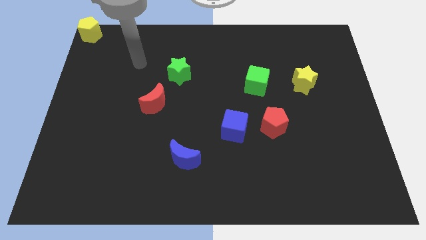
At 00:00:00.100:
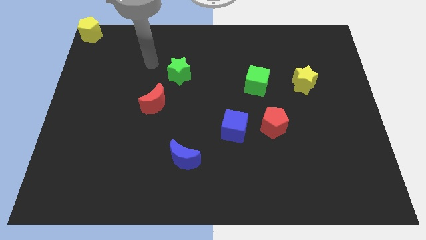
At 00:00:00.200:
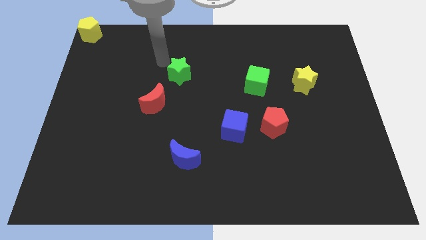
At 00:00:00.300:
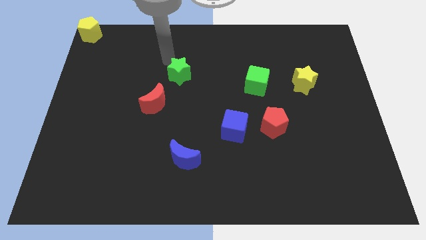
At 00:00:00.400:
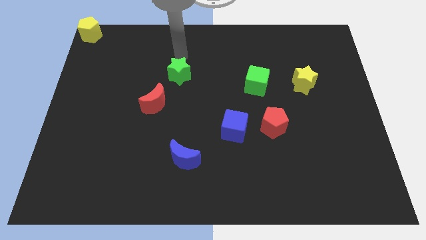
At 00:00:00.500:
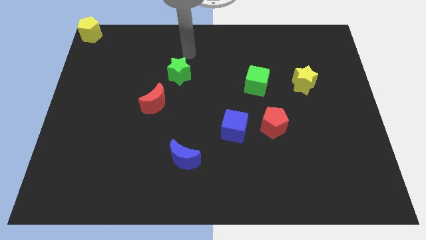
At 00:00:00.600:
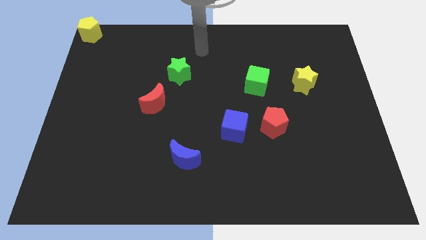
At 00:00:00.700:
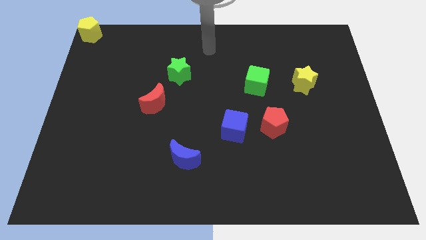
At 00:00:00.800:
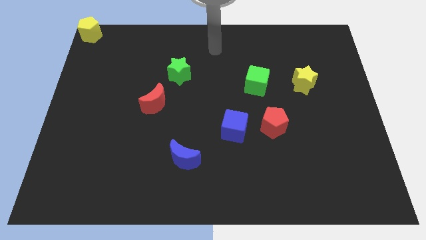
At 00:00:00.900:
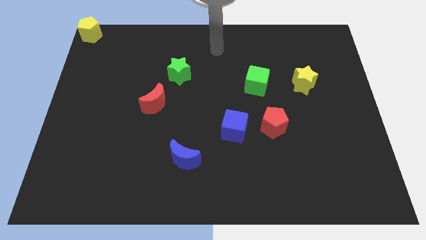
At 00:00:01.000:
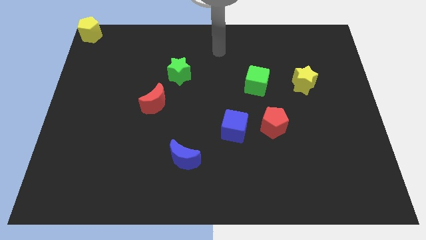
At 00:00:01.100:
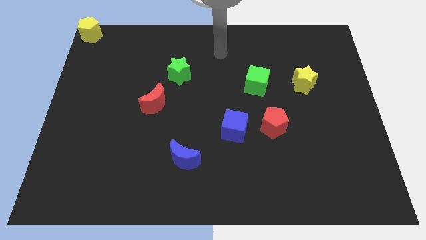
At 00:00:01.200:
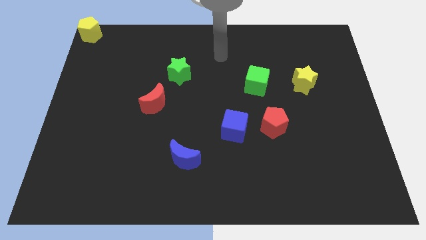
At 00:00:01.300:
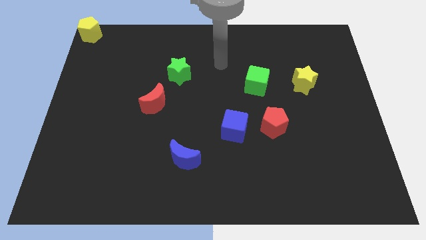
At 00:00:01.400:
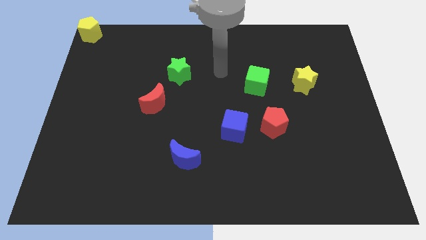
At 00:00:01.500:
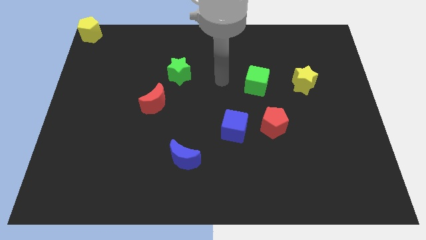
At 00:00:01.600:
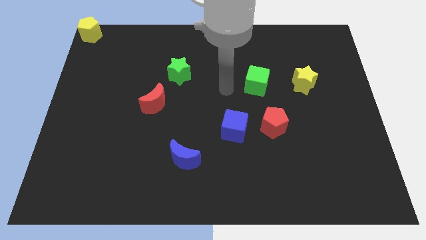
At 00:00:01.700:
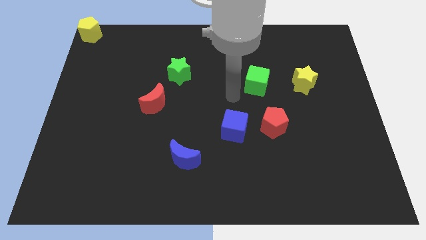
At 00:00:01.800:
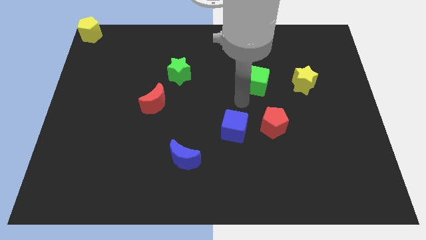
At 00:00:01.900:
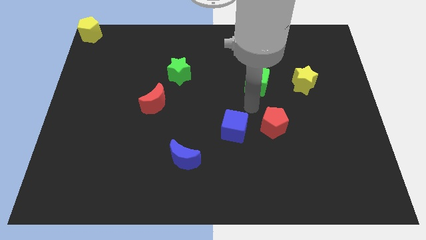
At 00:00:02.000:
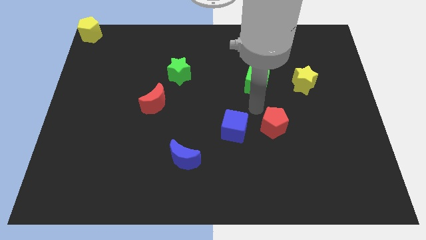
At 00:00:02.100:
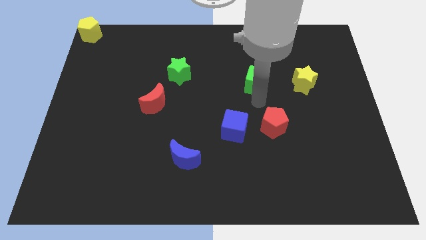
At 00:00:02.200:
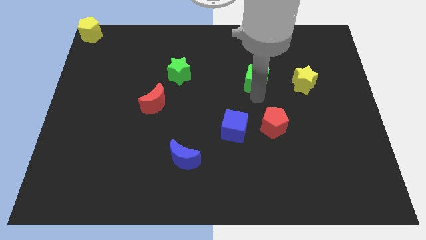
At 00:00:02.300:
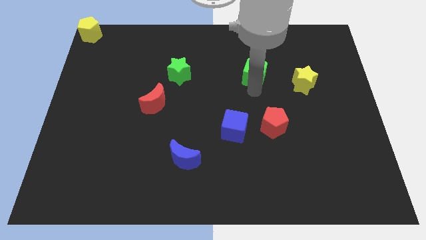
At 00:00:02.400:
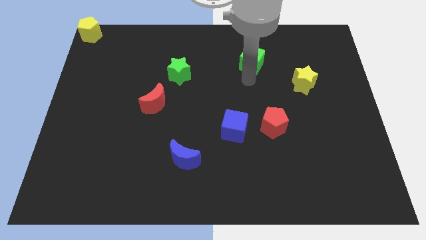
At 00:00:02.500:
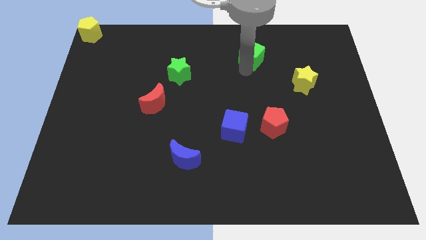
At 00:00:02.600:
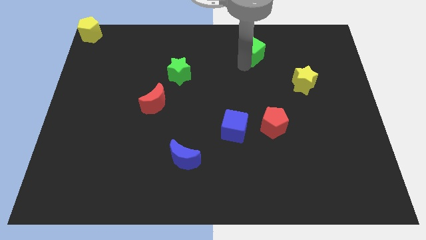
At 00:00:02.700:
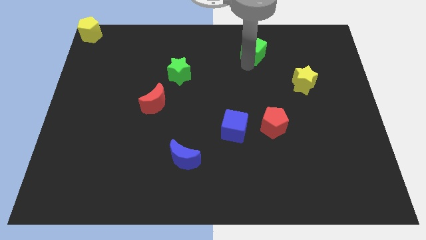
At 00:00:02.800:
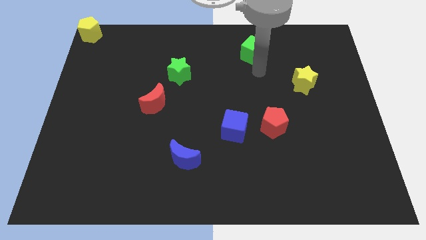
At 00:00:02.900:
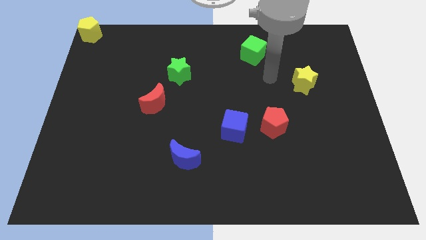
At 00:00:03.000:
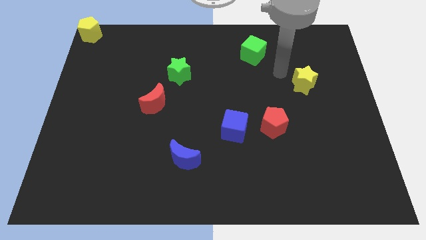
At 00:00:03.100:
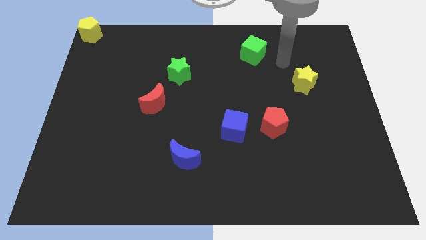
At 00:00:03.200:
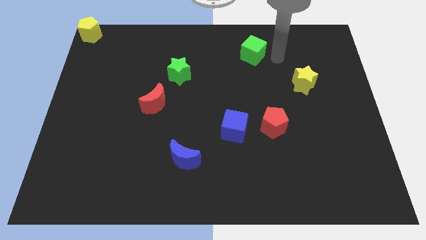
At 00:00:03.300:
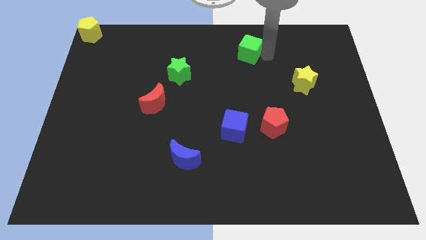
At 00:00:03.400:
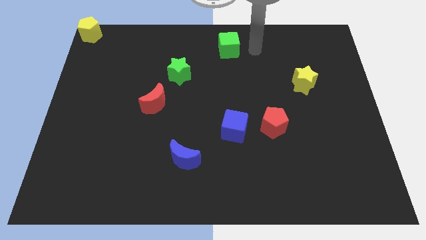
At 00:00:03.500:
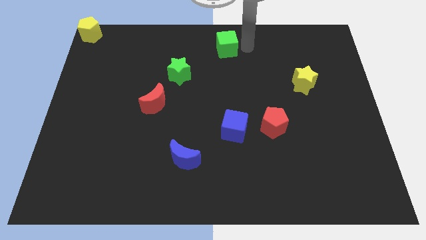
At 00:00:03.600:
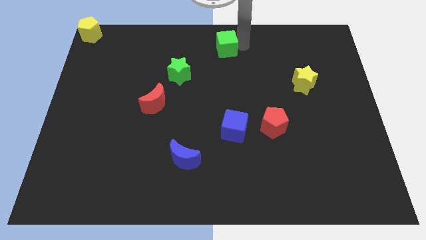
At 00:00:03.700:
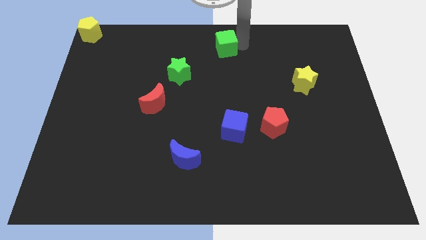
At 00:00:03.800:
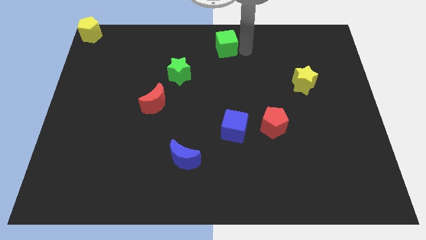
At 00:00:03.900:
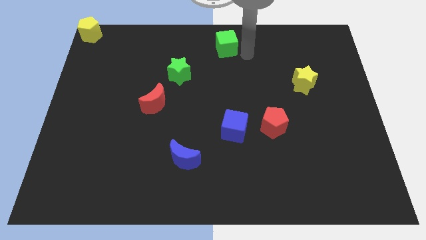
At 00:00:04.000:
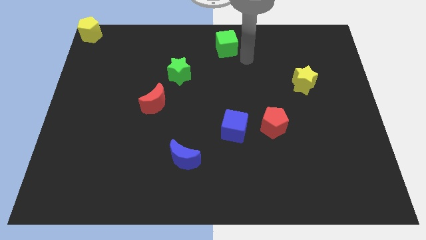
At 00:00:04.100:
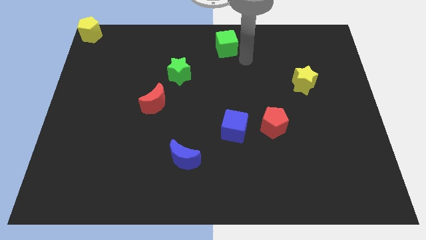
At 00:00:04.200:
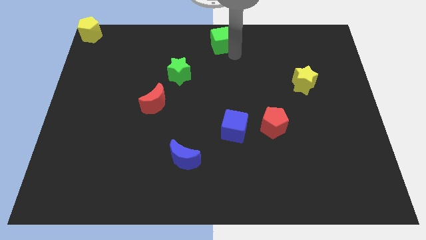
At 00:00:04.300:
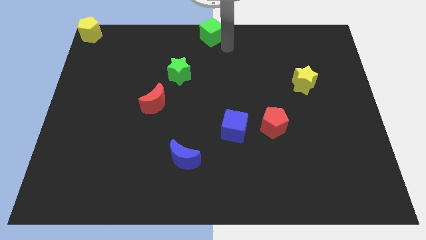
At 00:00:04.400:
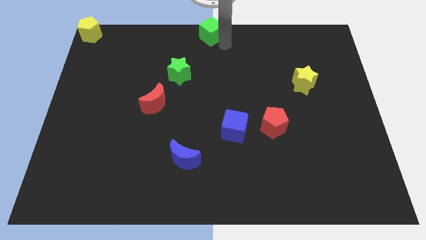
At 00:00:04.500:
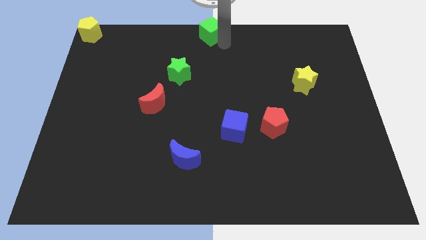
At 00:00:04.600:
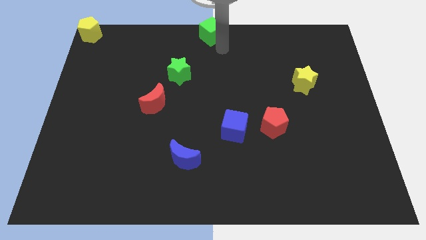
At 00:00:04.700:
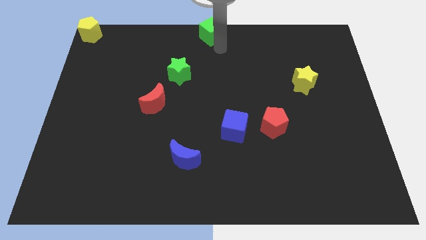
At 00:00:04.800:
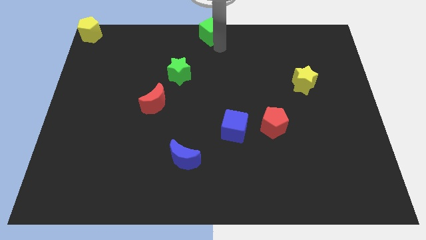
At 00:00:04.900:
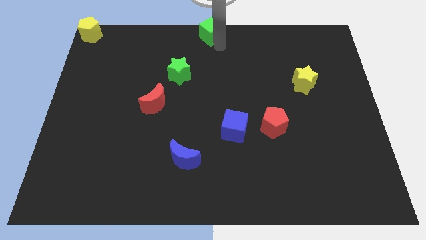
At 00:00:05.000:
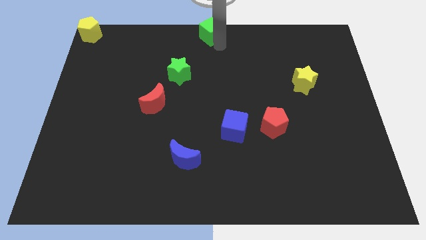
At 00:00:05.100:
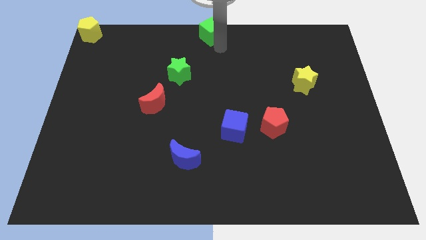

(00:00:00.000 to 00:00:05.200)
place the green cube to top center of the board

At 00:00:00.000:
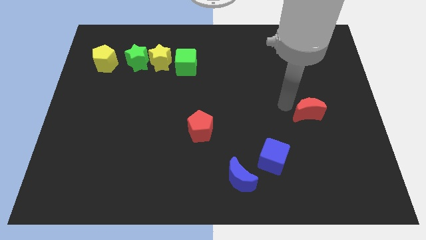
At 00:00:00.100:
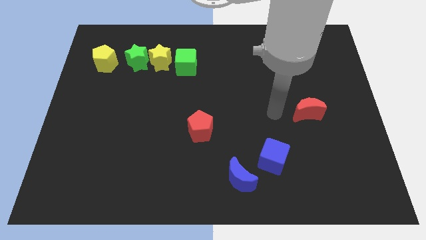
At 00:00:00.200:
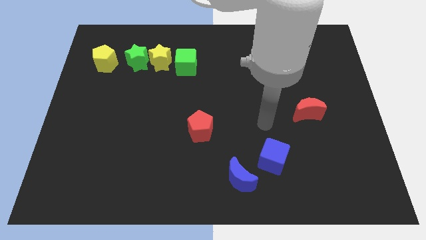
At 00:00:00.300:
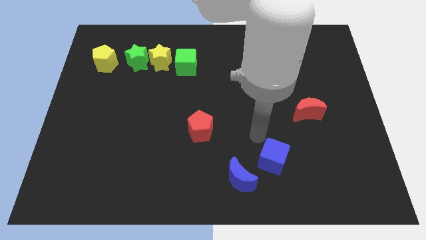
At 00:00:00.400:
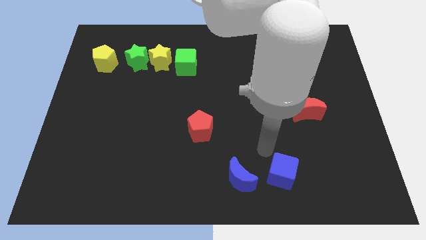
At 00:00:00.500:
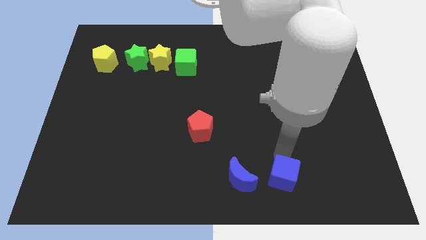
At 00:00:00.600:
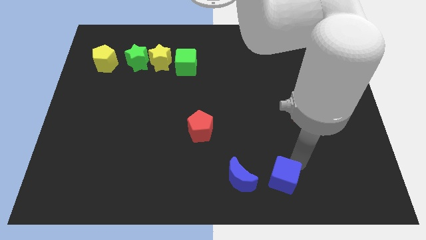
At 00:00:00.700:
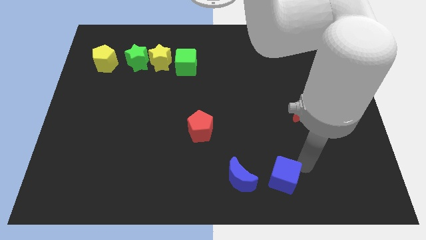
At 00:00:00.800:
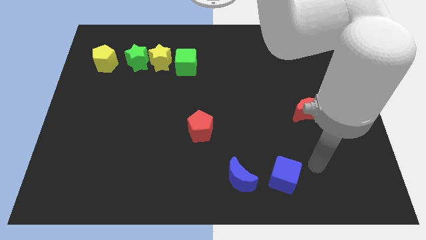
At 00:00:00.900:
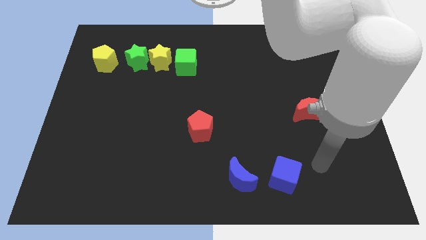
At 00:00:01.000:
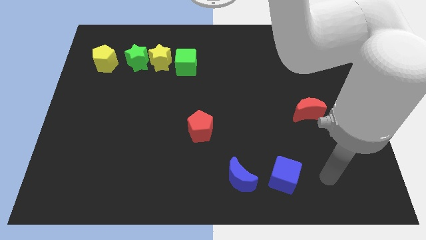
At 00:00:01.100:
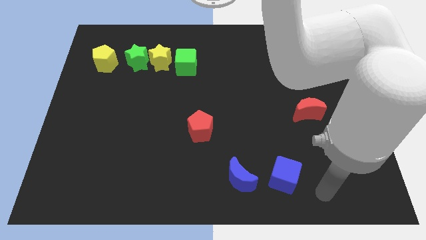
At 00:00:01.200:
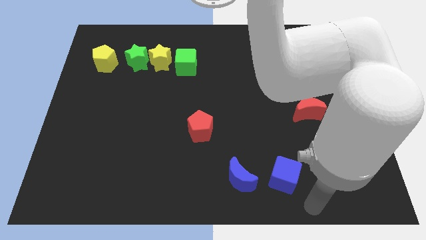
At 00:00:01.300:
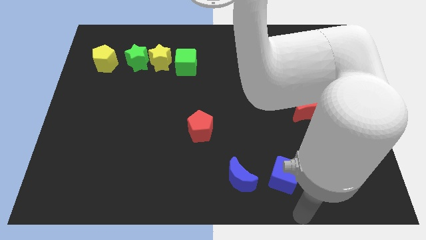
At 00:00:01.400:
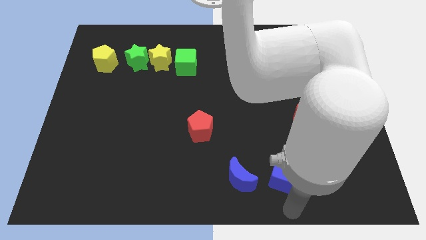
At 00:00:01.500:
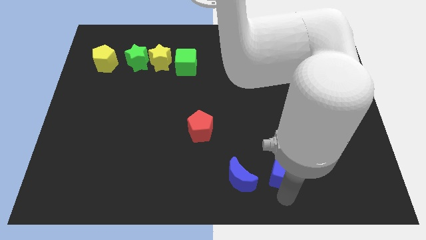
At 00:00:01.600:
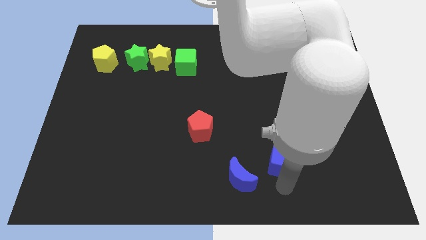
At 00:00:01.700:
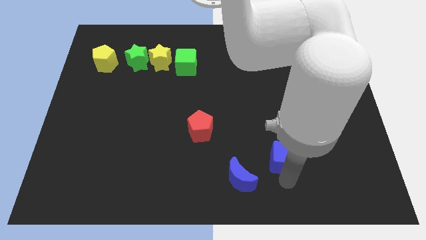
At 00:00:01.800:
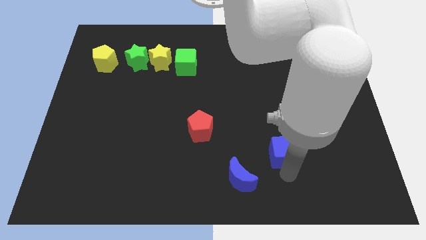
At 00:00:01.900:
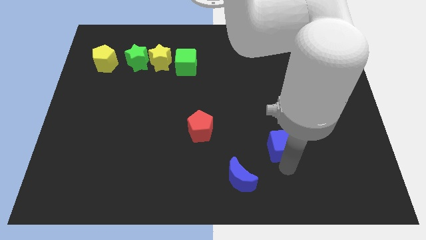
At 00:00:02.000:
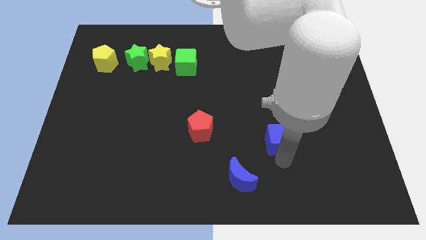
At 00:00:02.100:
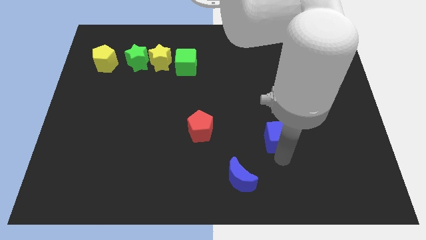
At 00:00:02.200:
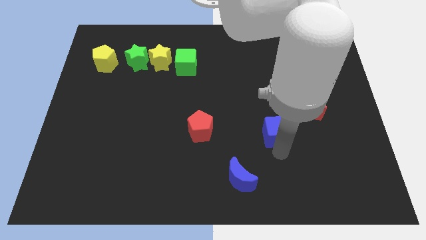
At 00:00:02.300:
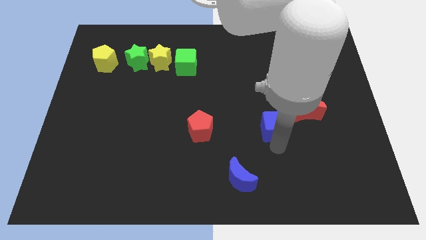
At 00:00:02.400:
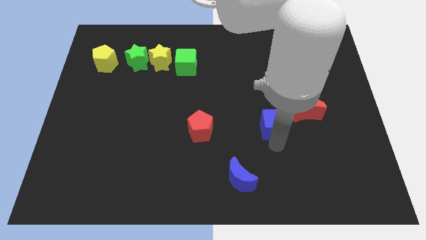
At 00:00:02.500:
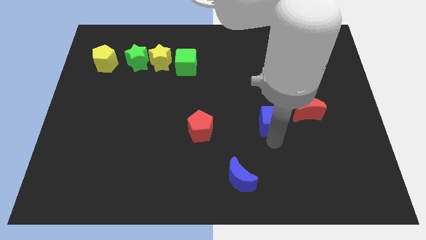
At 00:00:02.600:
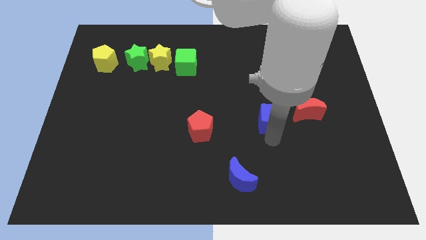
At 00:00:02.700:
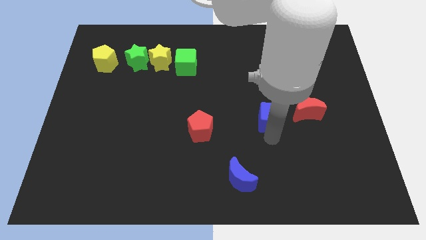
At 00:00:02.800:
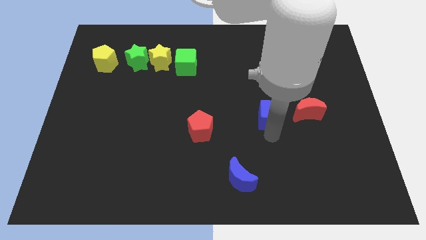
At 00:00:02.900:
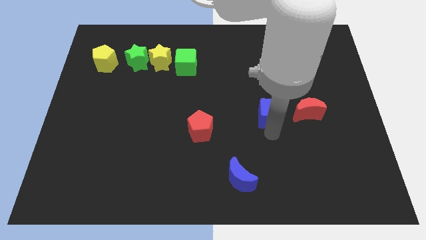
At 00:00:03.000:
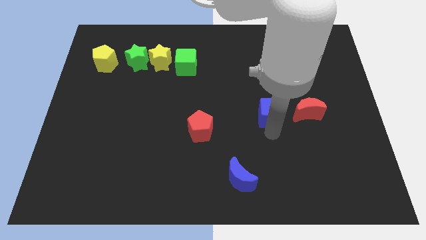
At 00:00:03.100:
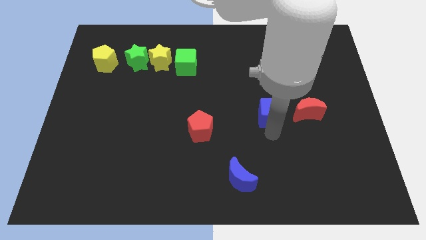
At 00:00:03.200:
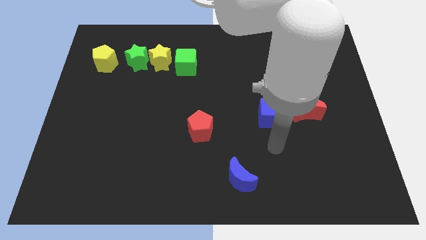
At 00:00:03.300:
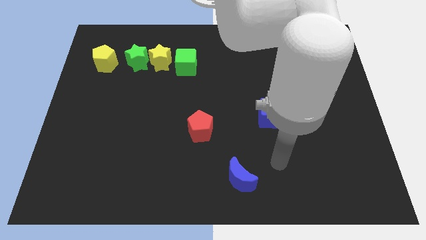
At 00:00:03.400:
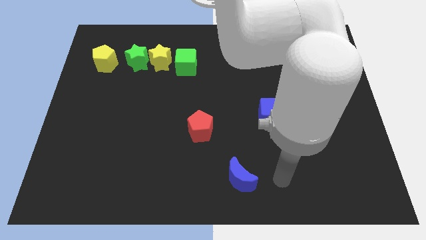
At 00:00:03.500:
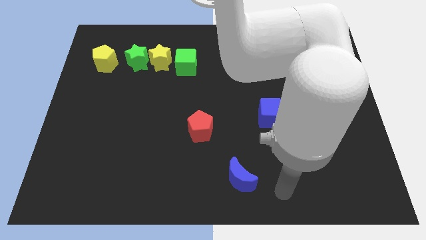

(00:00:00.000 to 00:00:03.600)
place the blue cube in between red moon and red pentagon
